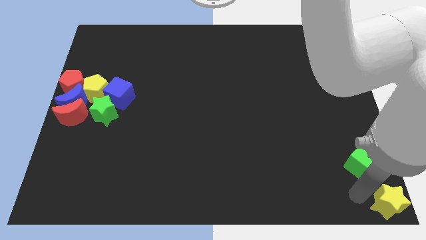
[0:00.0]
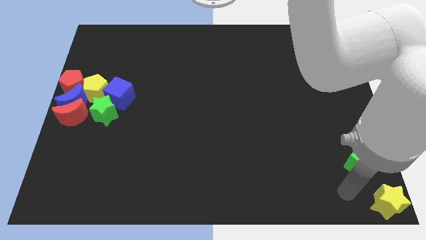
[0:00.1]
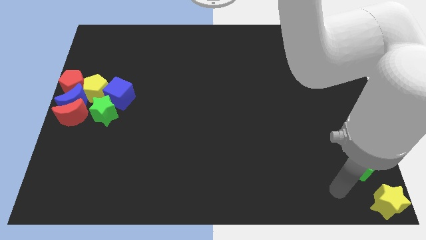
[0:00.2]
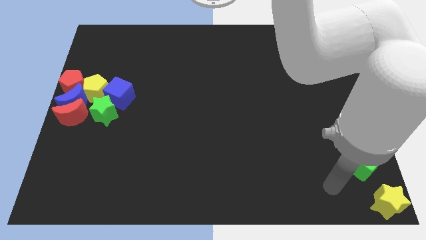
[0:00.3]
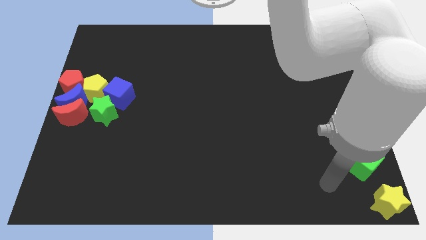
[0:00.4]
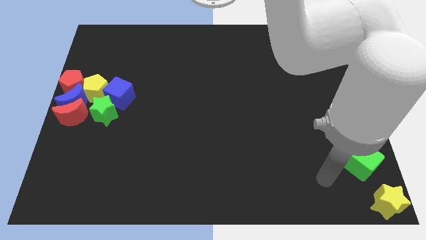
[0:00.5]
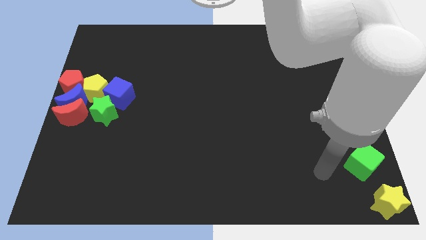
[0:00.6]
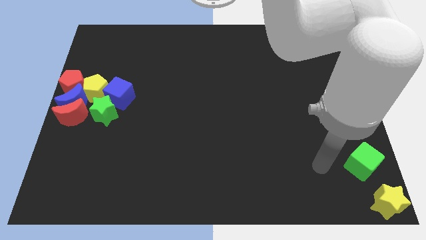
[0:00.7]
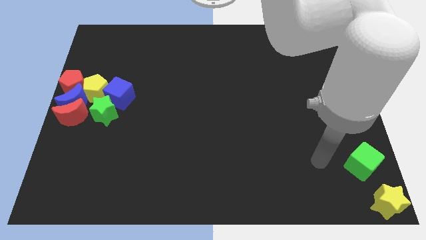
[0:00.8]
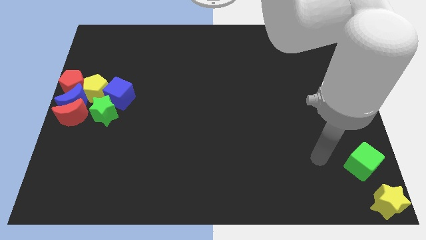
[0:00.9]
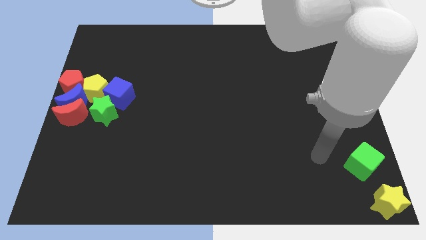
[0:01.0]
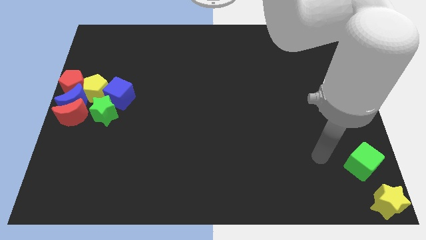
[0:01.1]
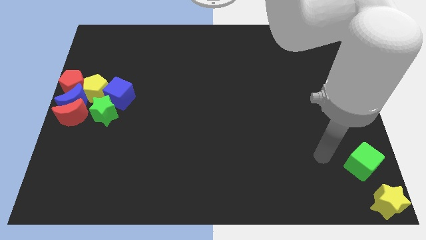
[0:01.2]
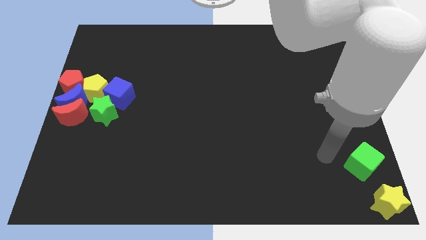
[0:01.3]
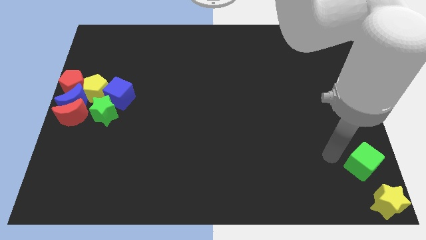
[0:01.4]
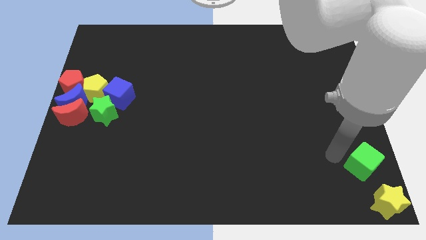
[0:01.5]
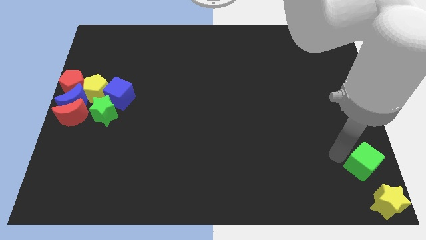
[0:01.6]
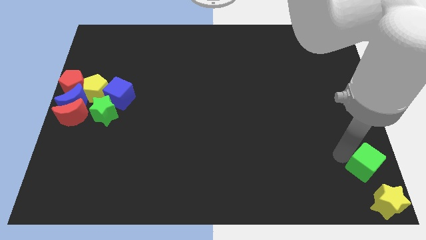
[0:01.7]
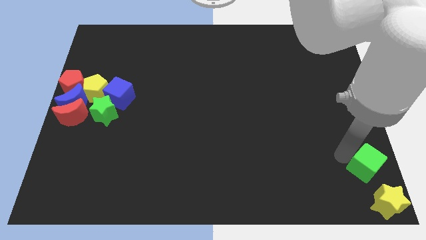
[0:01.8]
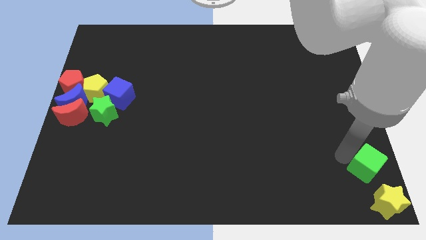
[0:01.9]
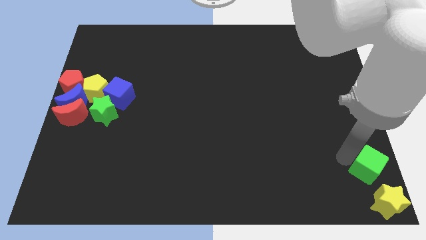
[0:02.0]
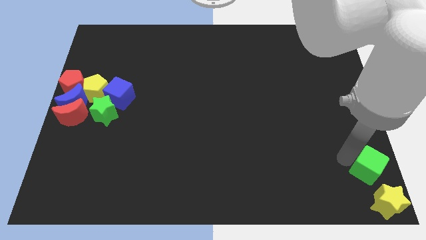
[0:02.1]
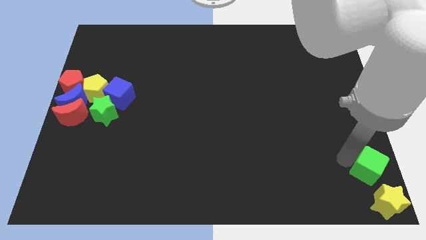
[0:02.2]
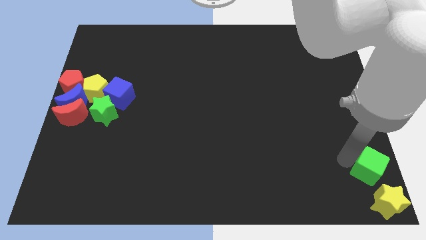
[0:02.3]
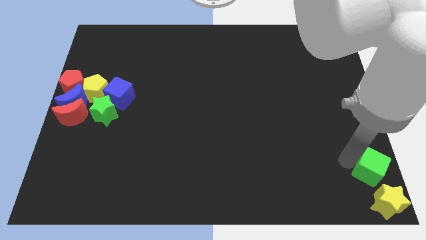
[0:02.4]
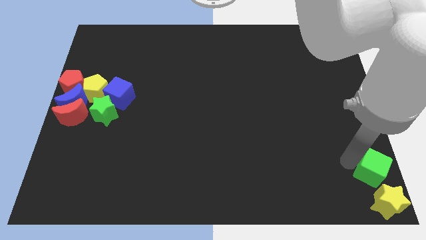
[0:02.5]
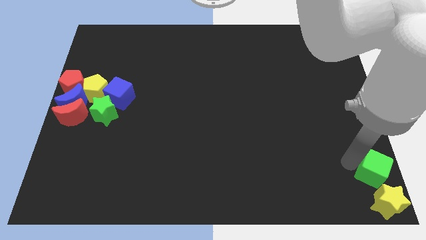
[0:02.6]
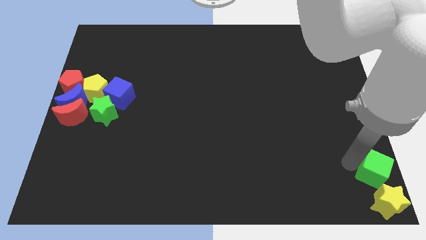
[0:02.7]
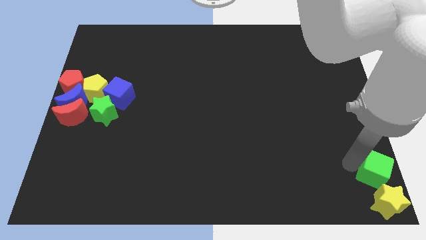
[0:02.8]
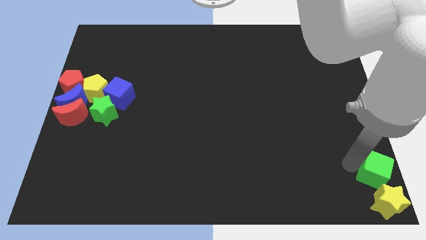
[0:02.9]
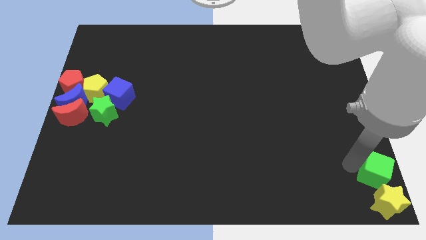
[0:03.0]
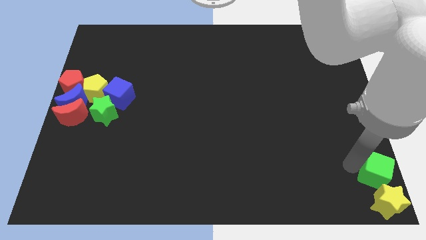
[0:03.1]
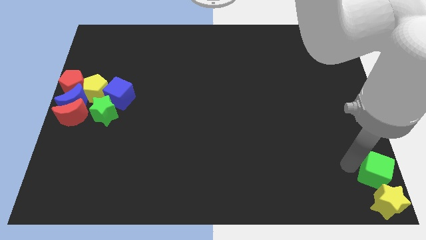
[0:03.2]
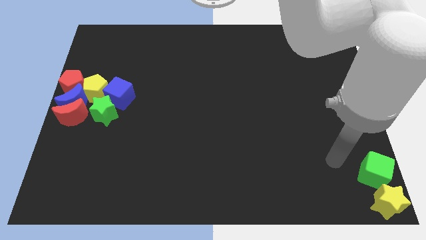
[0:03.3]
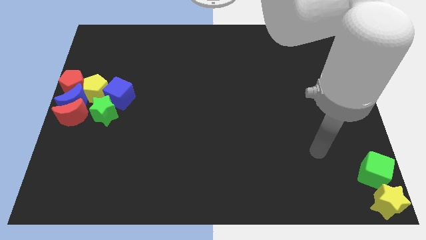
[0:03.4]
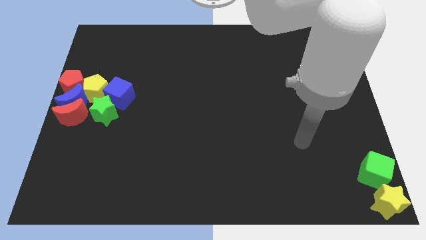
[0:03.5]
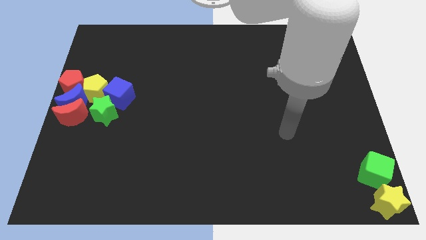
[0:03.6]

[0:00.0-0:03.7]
put the green cube to the top side of the yellow star

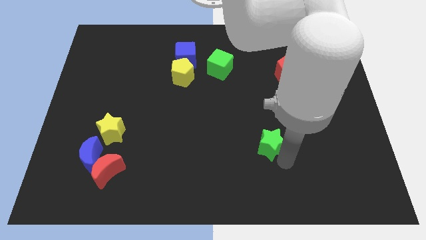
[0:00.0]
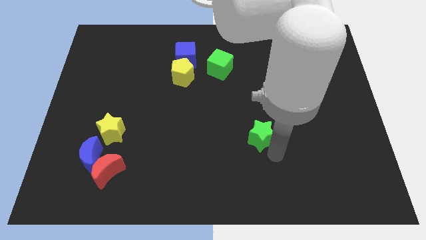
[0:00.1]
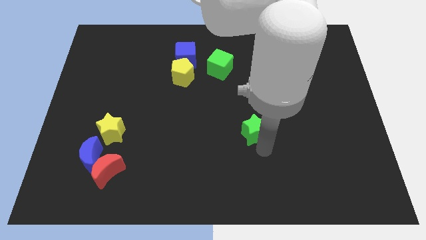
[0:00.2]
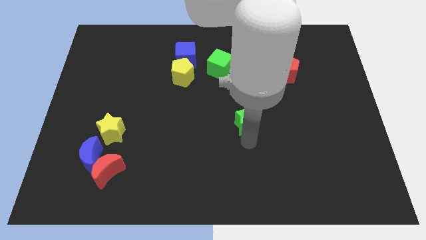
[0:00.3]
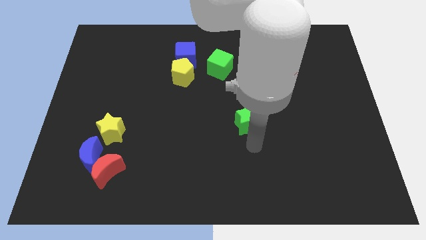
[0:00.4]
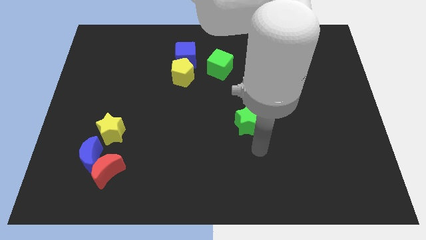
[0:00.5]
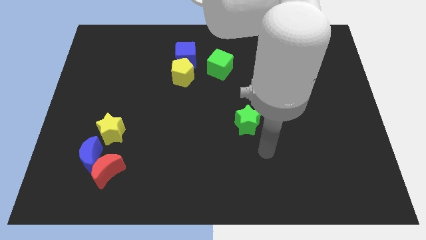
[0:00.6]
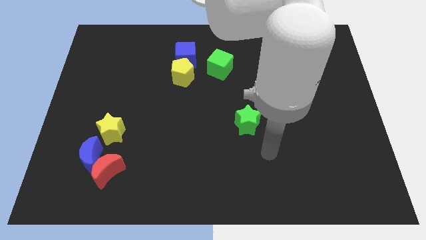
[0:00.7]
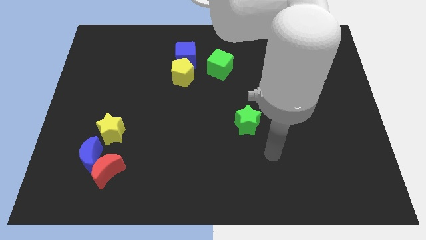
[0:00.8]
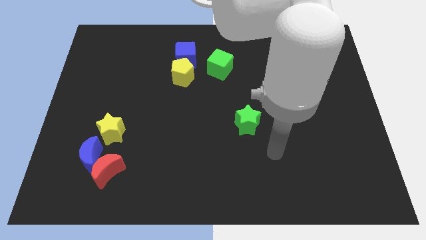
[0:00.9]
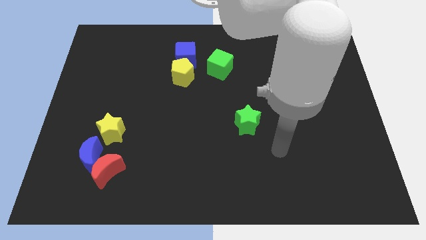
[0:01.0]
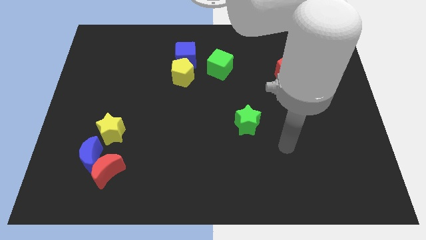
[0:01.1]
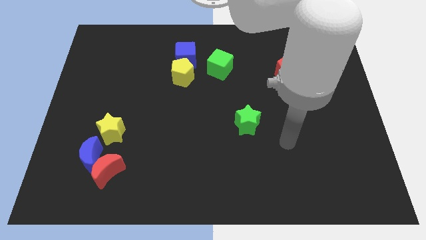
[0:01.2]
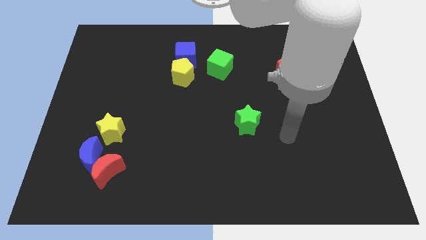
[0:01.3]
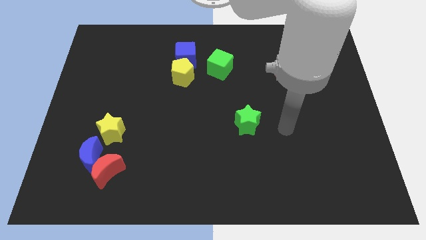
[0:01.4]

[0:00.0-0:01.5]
move the green star towards the center of the board

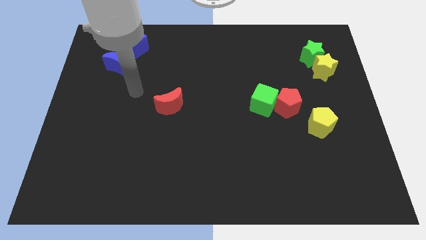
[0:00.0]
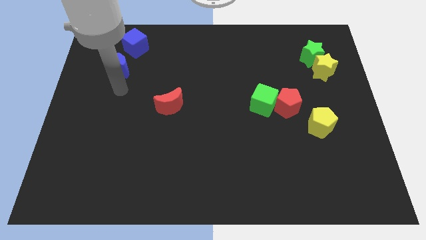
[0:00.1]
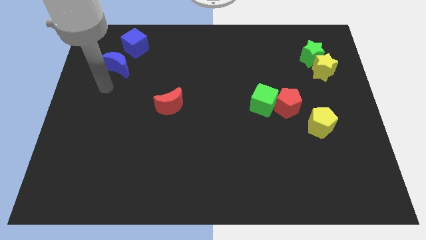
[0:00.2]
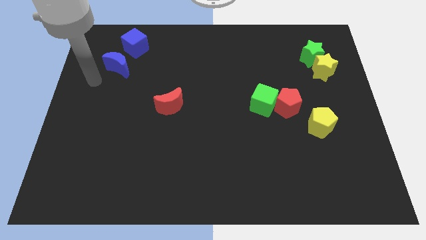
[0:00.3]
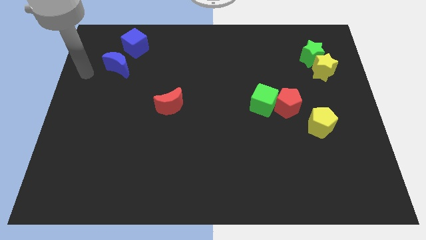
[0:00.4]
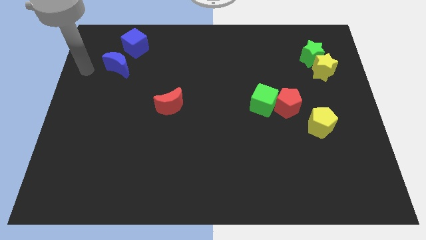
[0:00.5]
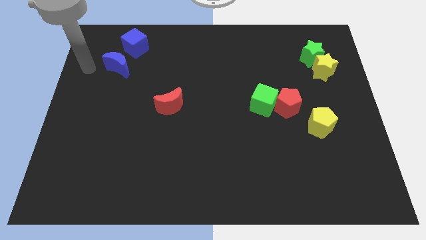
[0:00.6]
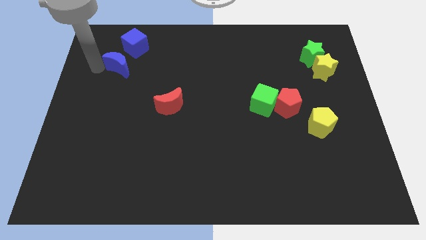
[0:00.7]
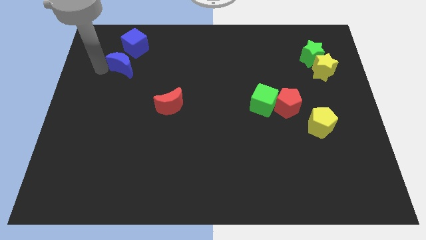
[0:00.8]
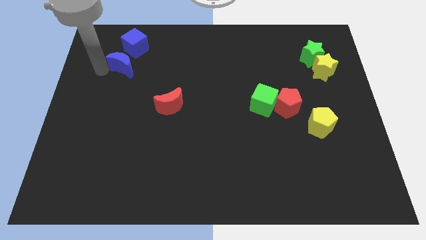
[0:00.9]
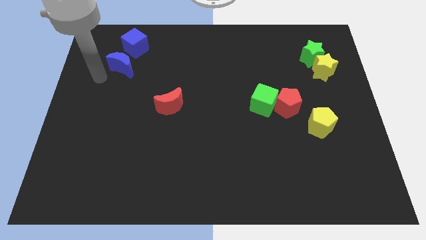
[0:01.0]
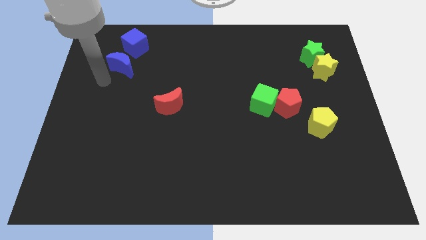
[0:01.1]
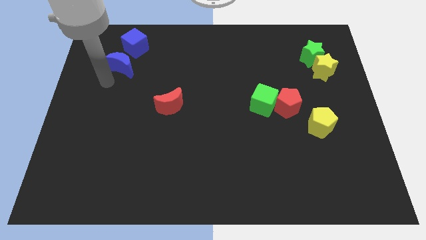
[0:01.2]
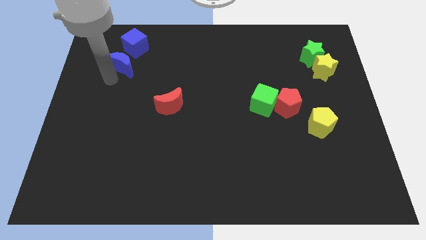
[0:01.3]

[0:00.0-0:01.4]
push the blue moon towards bottom of blue cube

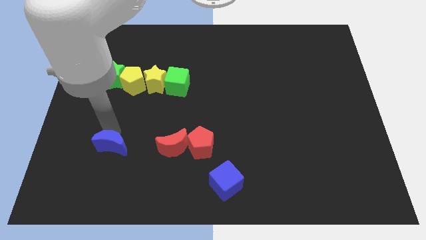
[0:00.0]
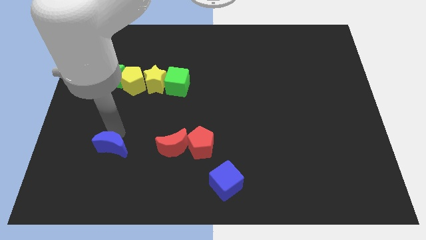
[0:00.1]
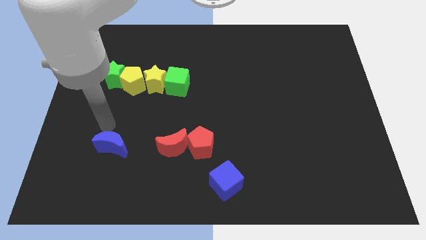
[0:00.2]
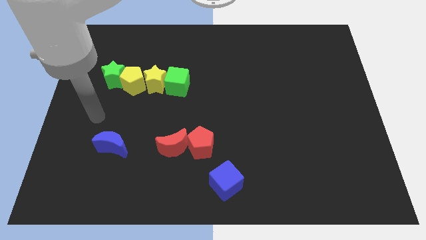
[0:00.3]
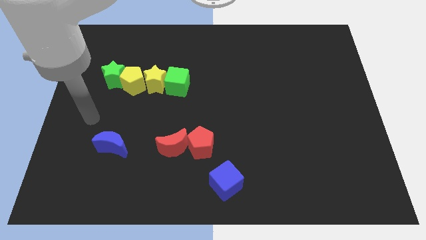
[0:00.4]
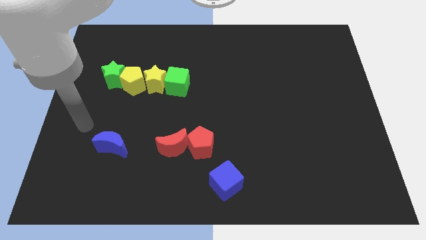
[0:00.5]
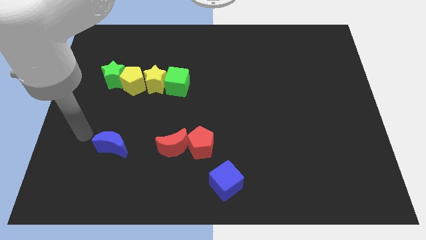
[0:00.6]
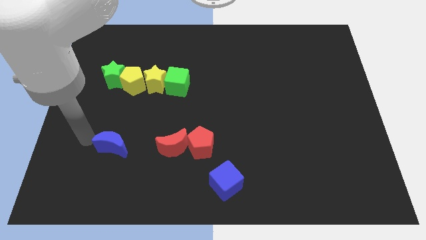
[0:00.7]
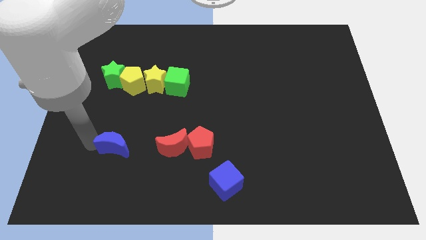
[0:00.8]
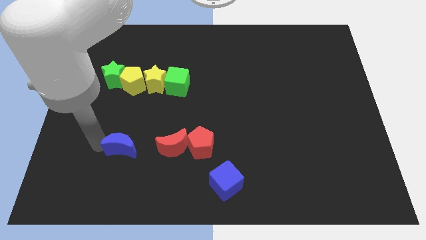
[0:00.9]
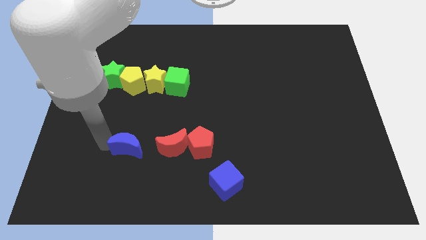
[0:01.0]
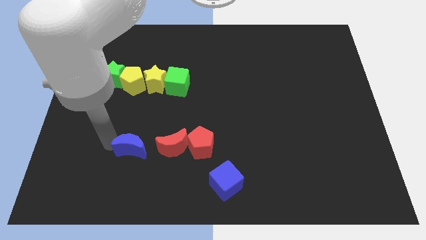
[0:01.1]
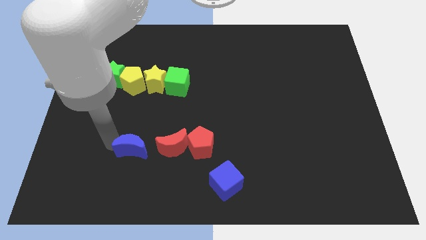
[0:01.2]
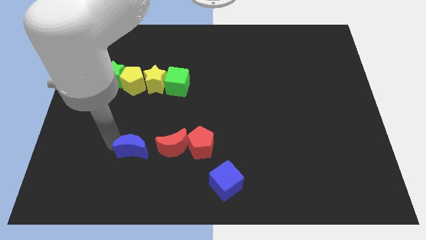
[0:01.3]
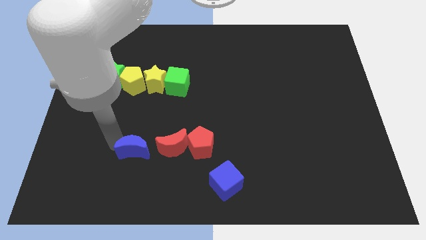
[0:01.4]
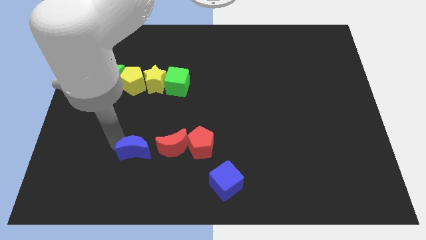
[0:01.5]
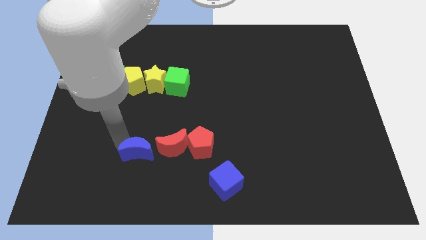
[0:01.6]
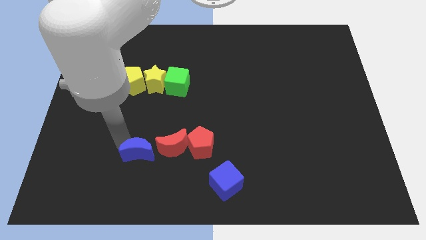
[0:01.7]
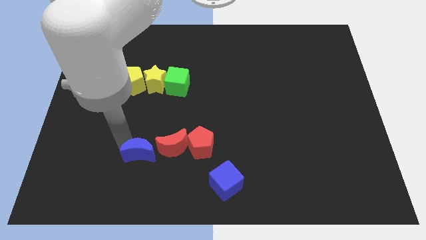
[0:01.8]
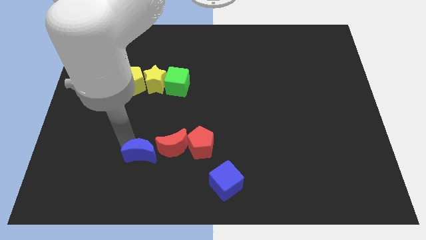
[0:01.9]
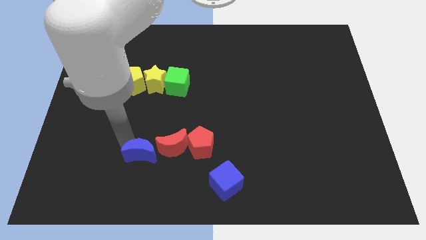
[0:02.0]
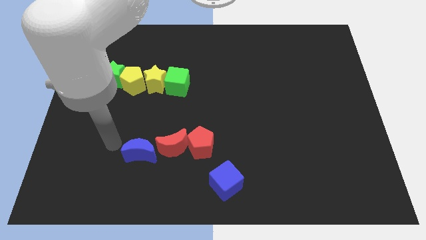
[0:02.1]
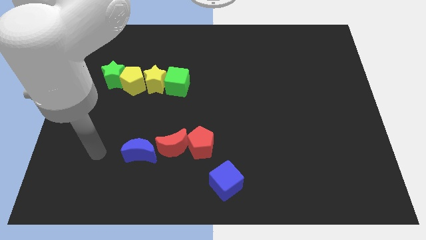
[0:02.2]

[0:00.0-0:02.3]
move the blue crescent close to the red crescent
